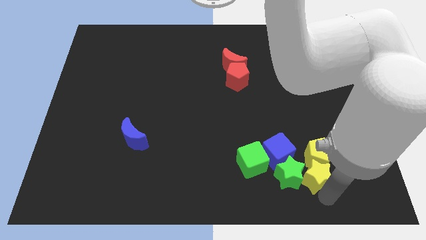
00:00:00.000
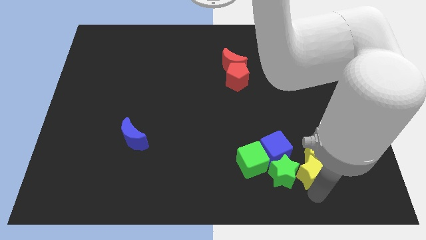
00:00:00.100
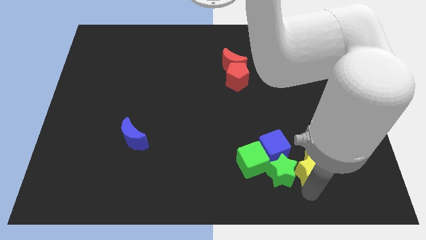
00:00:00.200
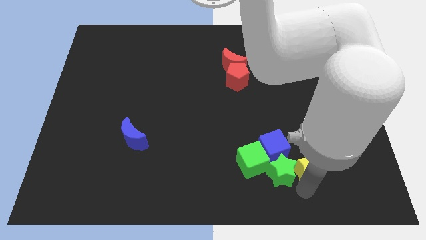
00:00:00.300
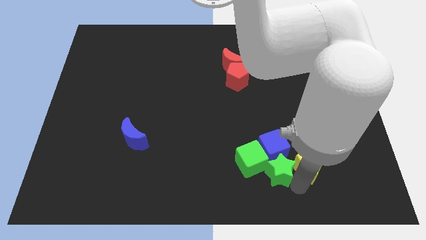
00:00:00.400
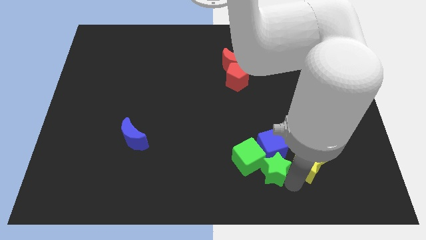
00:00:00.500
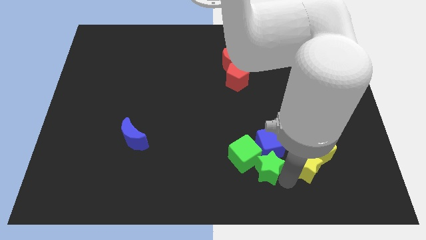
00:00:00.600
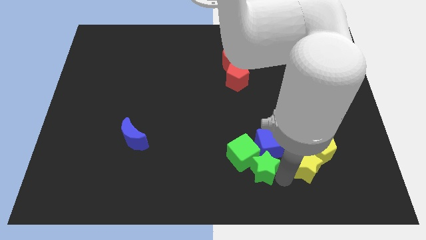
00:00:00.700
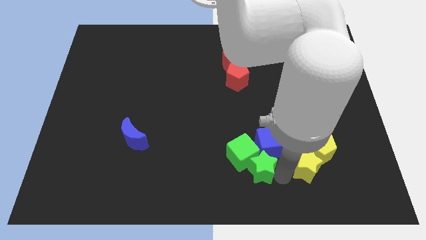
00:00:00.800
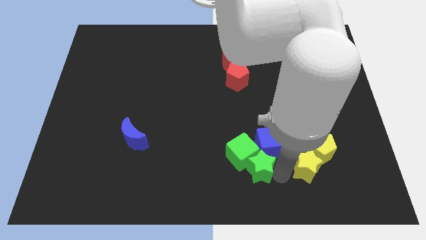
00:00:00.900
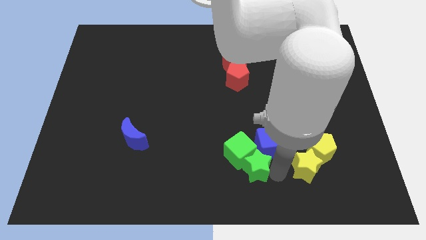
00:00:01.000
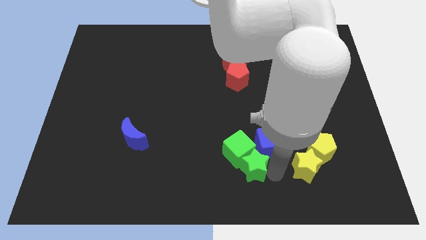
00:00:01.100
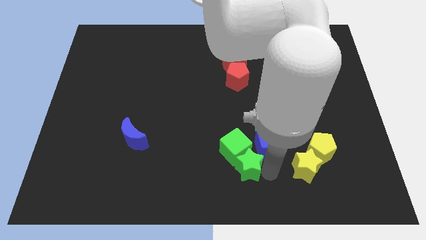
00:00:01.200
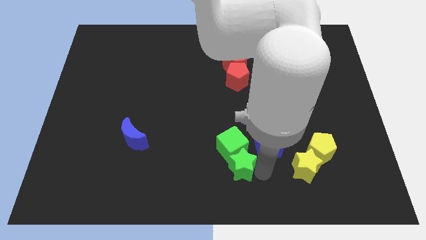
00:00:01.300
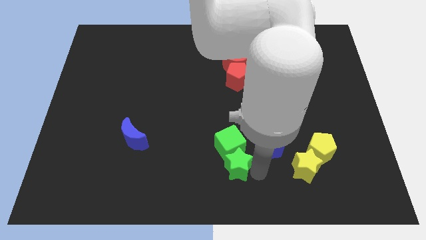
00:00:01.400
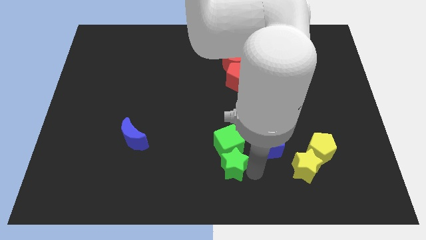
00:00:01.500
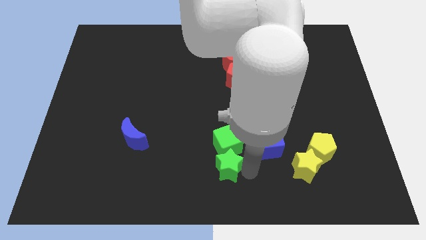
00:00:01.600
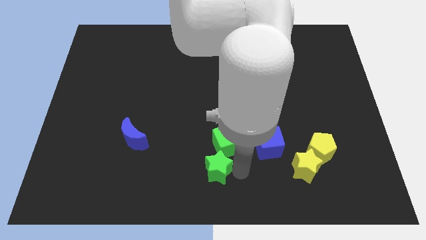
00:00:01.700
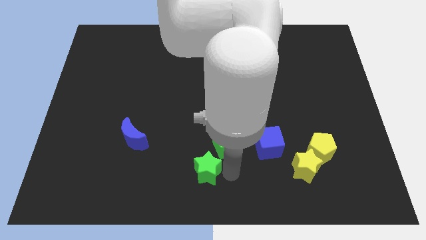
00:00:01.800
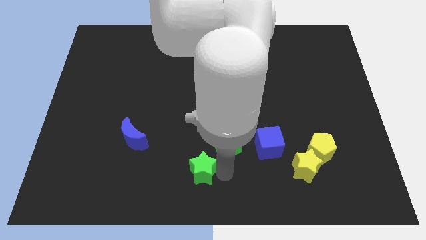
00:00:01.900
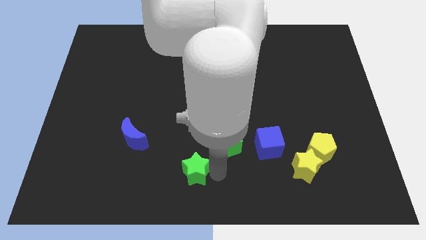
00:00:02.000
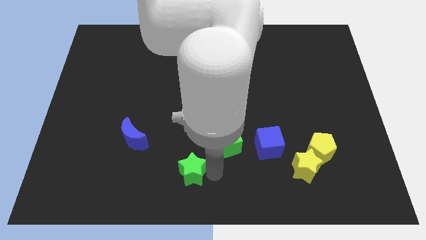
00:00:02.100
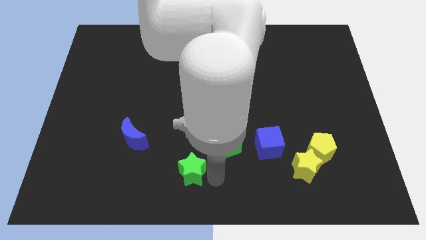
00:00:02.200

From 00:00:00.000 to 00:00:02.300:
separate the green star and the green cube

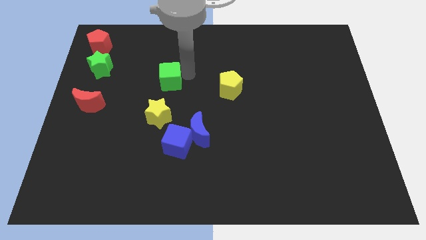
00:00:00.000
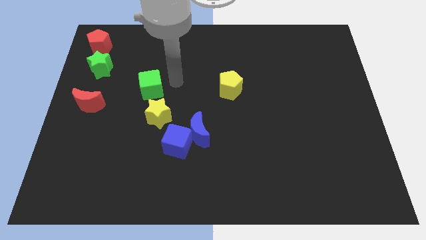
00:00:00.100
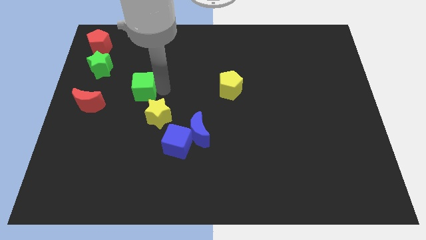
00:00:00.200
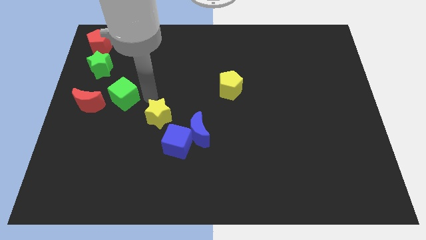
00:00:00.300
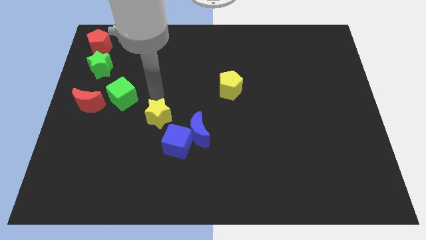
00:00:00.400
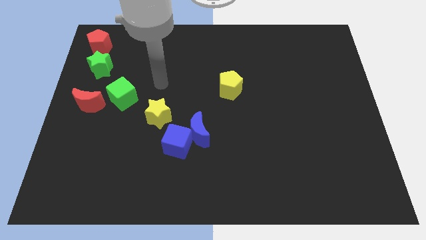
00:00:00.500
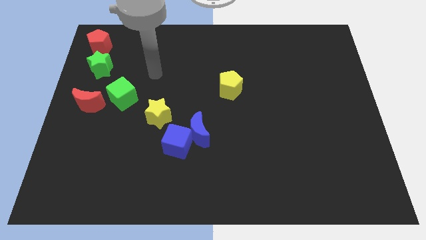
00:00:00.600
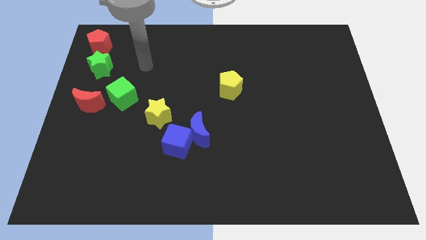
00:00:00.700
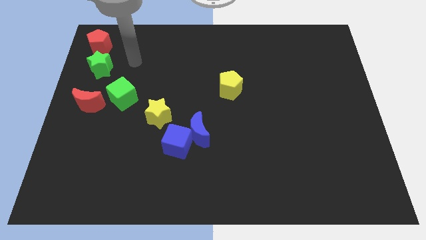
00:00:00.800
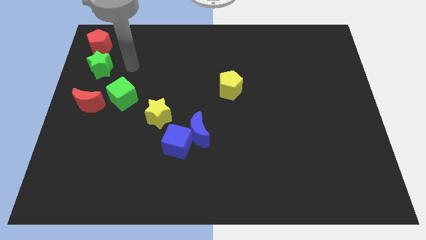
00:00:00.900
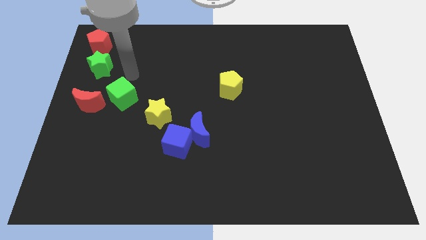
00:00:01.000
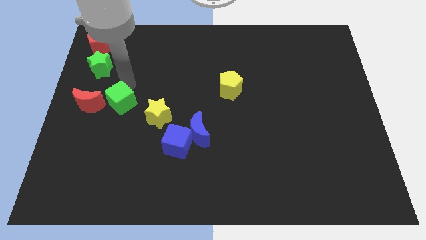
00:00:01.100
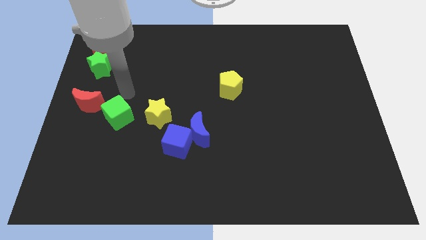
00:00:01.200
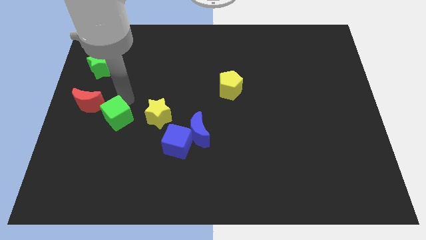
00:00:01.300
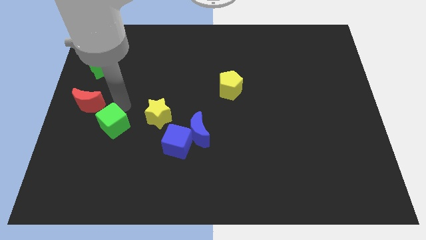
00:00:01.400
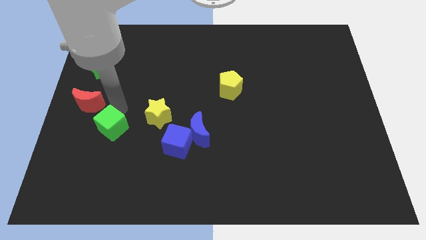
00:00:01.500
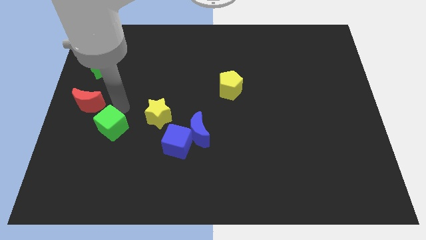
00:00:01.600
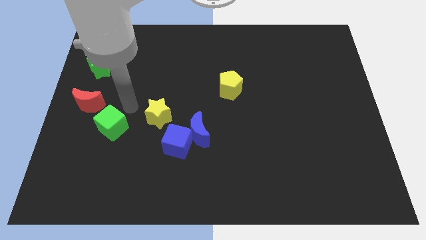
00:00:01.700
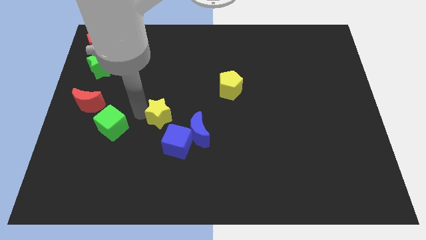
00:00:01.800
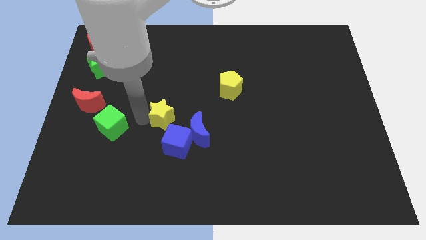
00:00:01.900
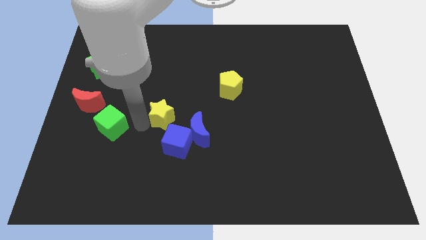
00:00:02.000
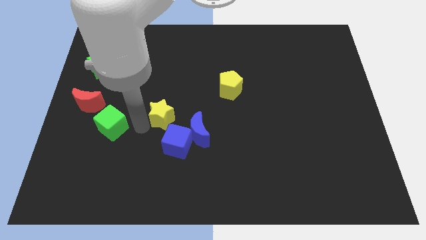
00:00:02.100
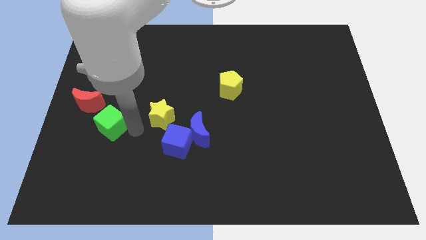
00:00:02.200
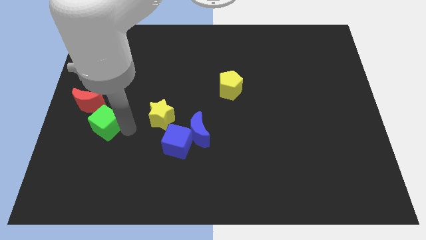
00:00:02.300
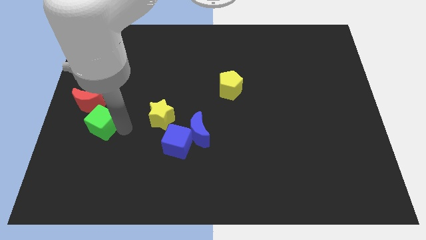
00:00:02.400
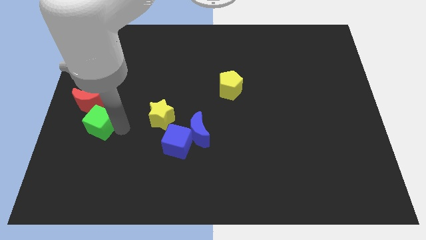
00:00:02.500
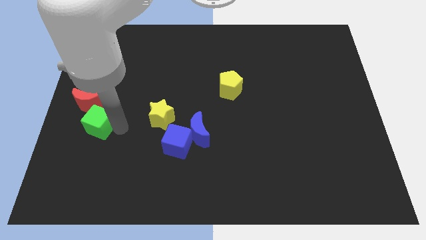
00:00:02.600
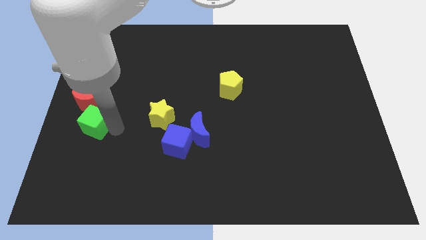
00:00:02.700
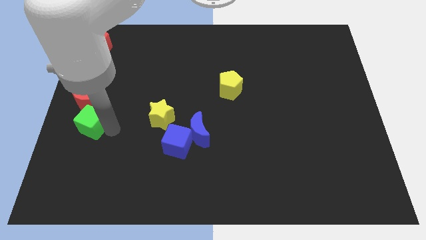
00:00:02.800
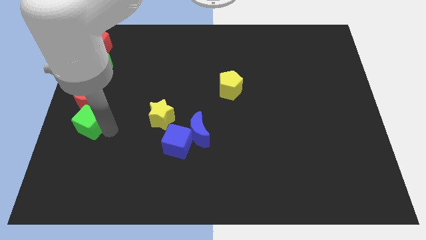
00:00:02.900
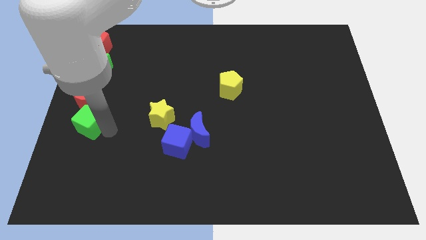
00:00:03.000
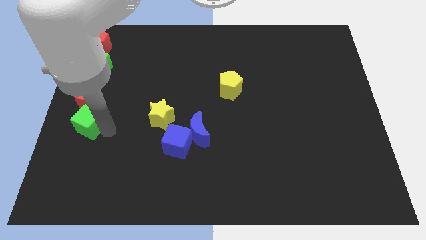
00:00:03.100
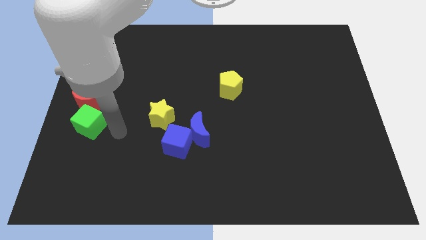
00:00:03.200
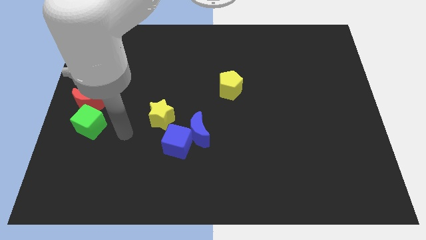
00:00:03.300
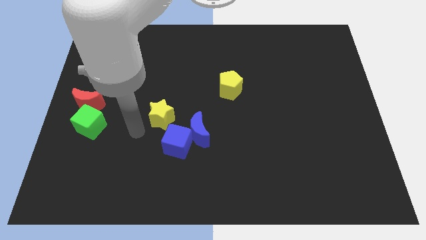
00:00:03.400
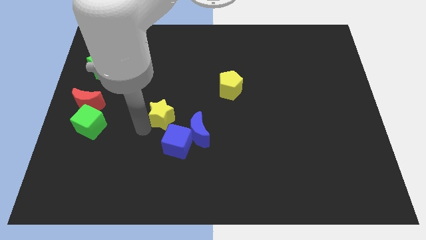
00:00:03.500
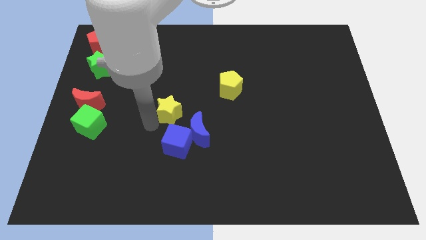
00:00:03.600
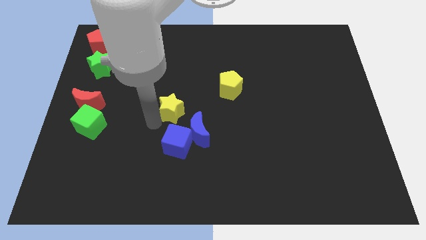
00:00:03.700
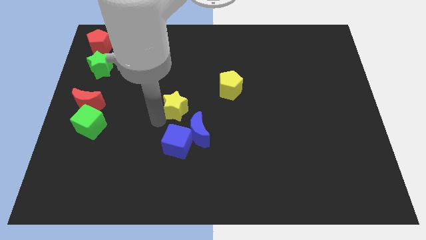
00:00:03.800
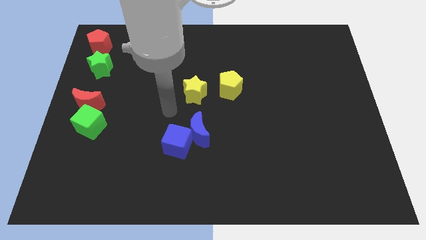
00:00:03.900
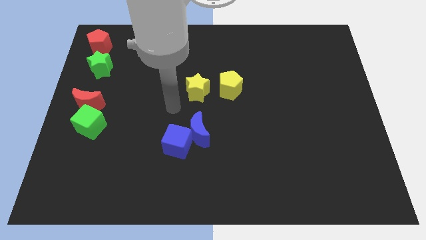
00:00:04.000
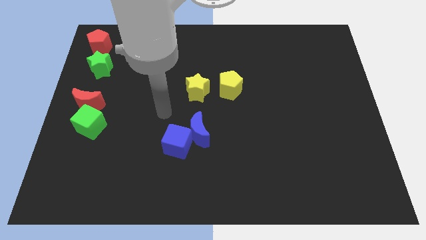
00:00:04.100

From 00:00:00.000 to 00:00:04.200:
push yellow star to the center of the board

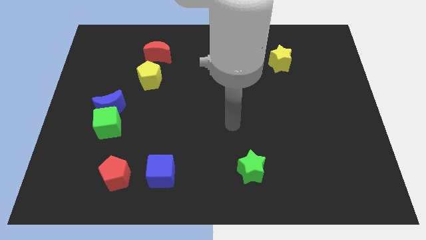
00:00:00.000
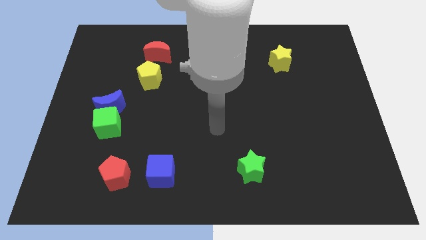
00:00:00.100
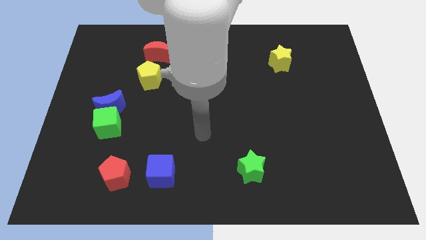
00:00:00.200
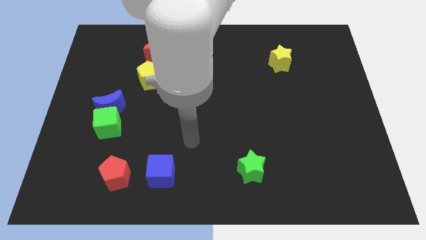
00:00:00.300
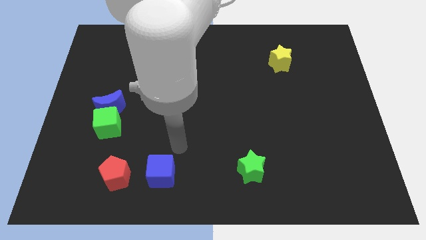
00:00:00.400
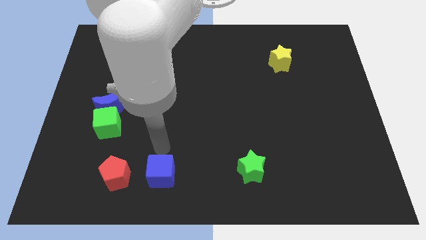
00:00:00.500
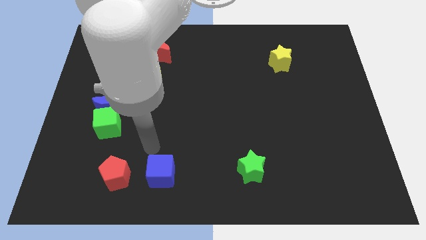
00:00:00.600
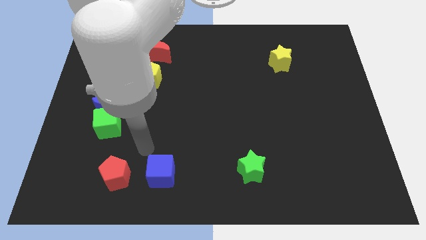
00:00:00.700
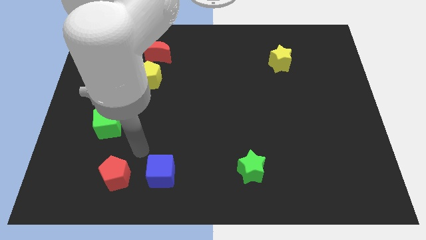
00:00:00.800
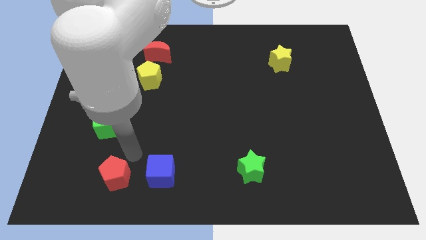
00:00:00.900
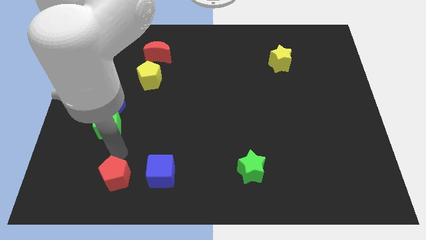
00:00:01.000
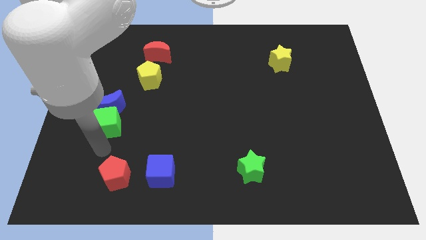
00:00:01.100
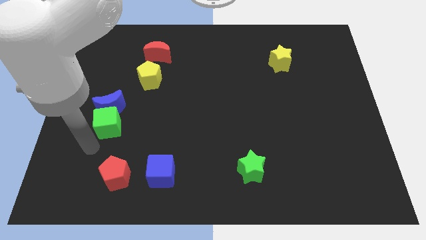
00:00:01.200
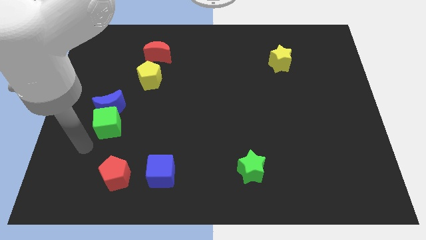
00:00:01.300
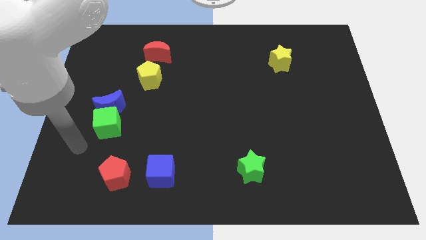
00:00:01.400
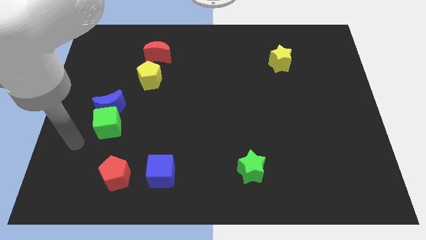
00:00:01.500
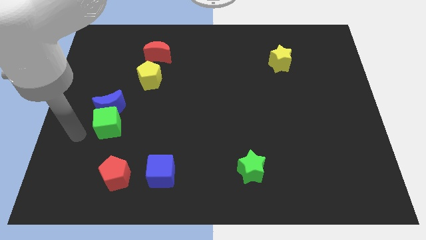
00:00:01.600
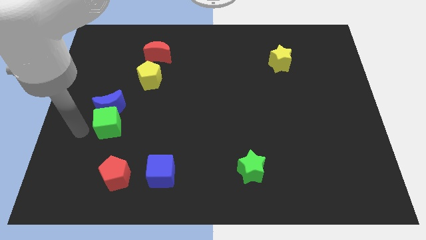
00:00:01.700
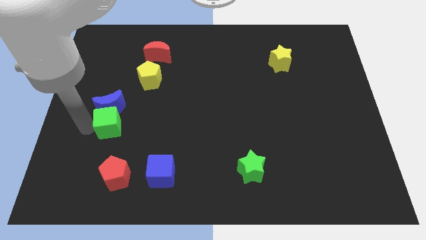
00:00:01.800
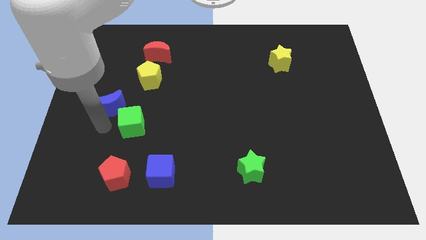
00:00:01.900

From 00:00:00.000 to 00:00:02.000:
move the green cube to the right bottom of the blue crescent

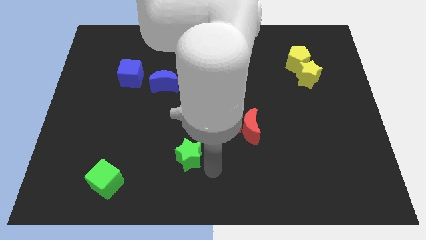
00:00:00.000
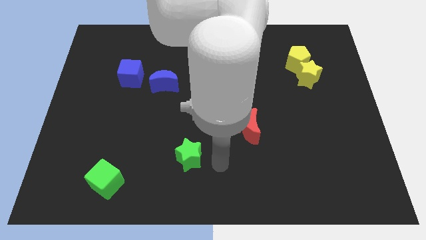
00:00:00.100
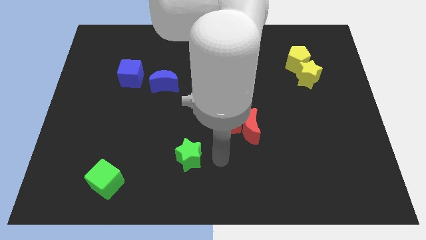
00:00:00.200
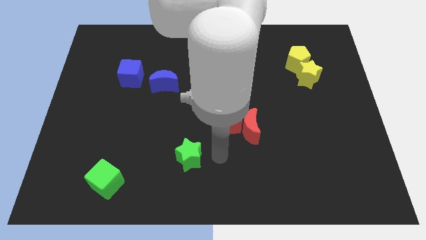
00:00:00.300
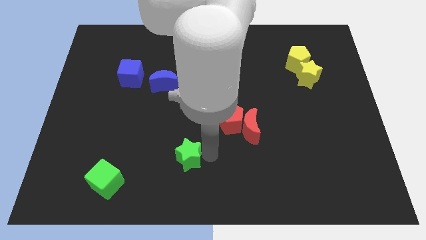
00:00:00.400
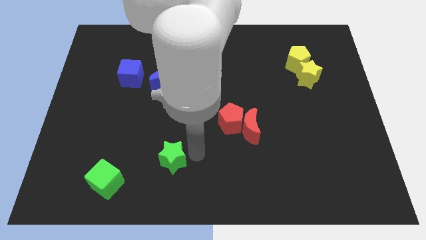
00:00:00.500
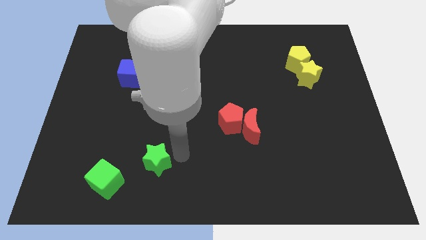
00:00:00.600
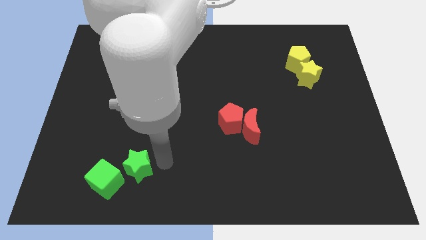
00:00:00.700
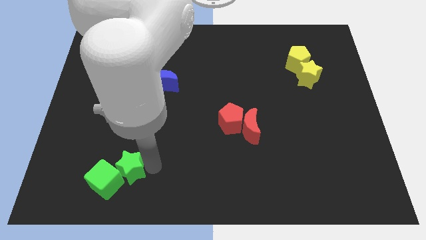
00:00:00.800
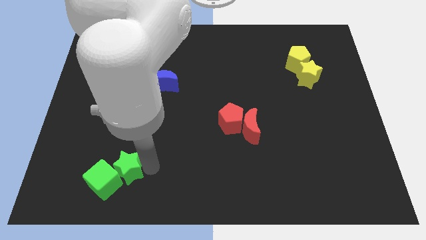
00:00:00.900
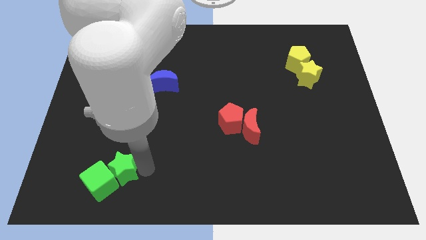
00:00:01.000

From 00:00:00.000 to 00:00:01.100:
push the green star to the right of the green cube
